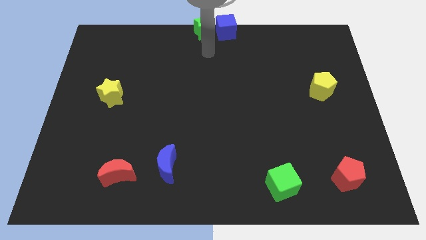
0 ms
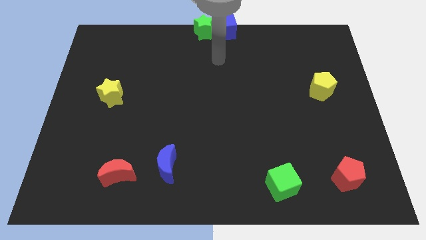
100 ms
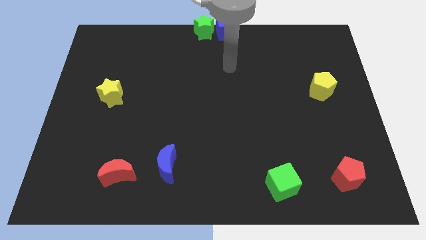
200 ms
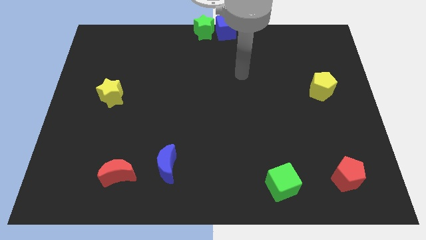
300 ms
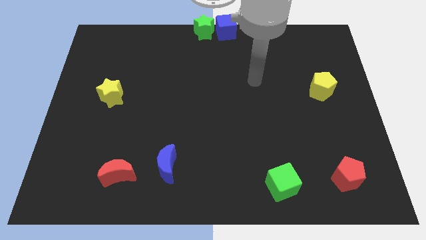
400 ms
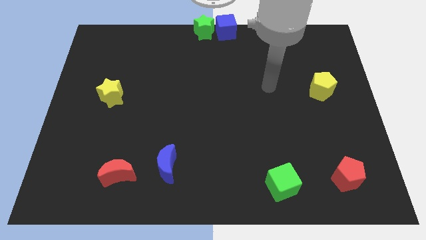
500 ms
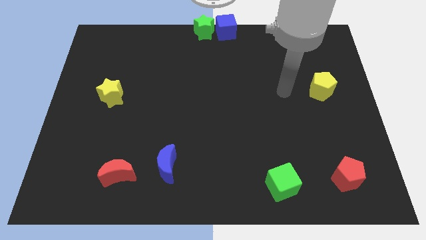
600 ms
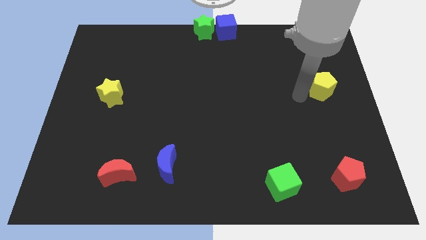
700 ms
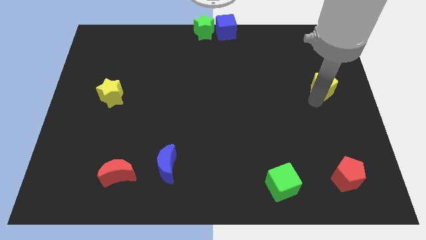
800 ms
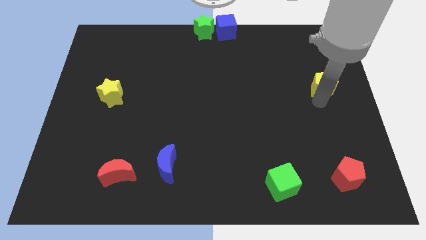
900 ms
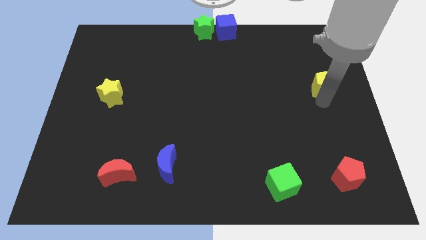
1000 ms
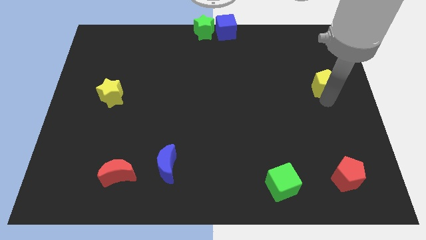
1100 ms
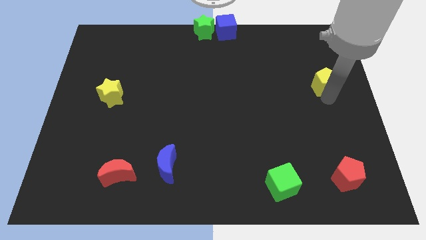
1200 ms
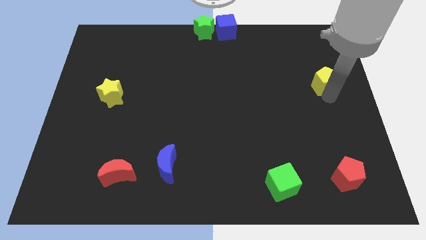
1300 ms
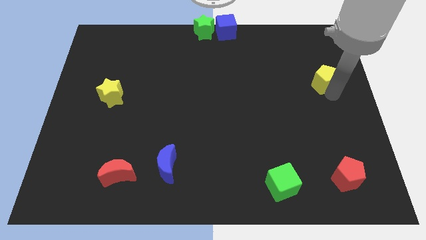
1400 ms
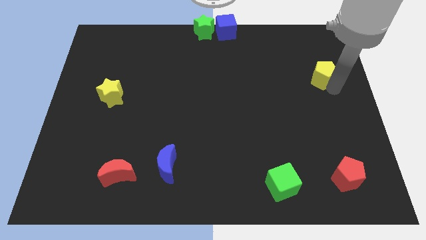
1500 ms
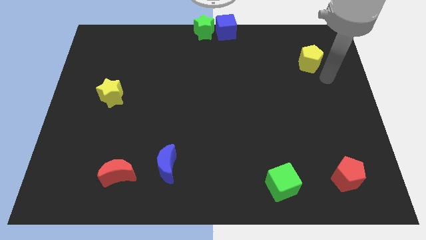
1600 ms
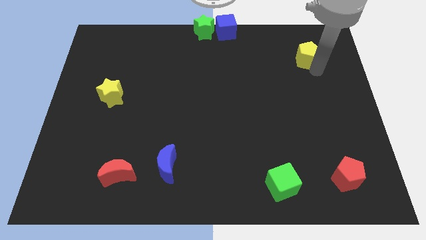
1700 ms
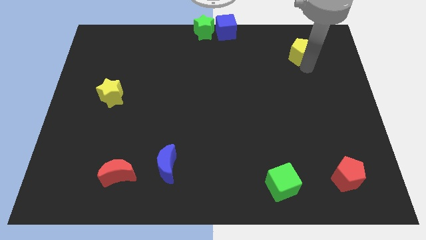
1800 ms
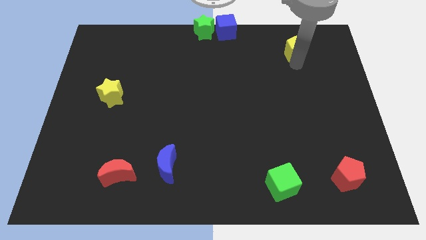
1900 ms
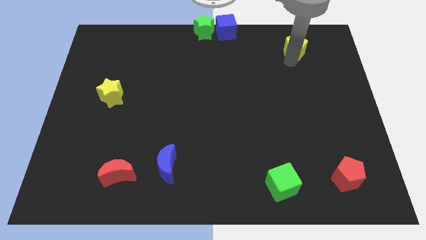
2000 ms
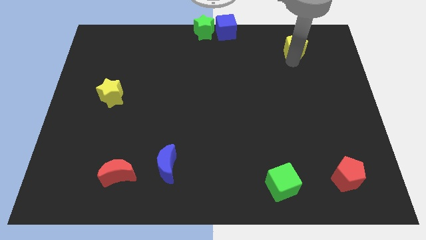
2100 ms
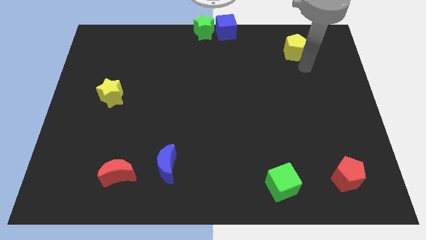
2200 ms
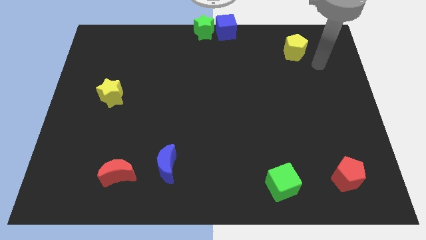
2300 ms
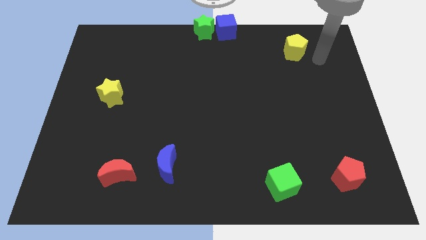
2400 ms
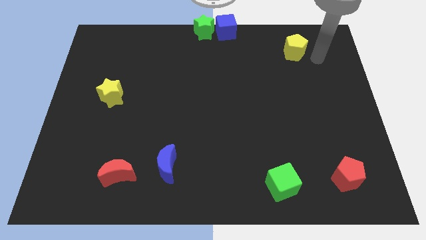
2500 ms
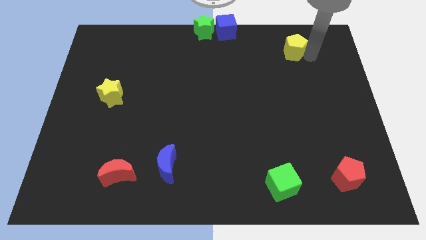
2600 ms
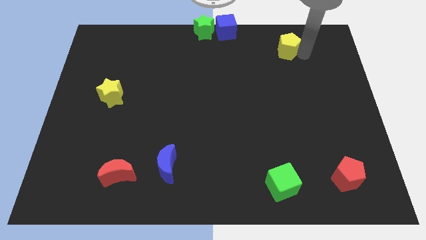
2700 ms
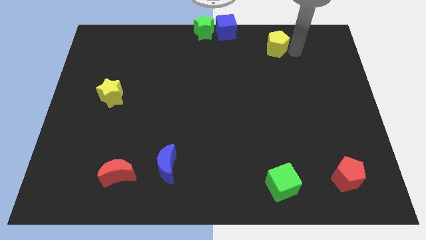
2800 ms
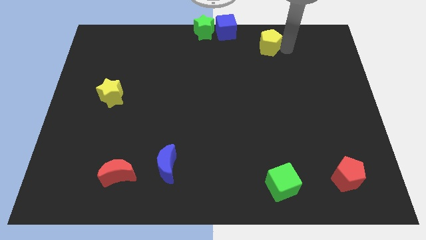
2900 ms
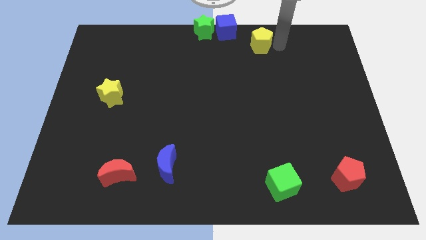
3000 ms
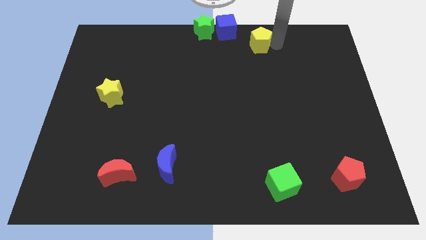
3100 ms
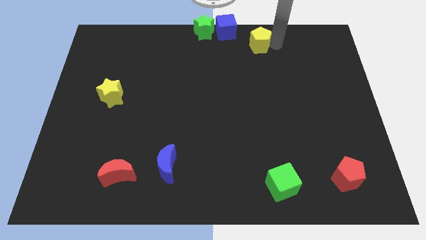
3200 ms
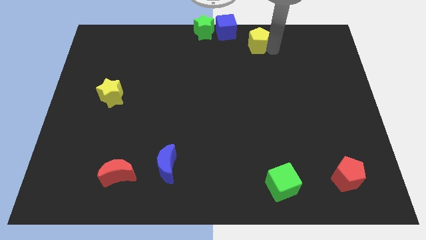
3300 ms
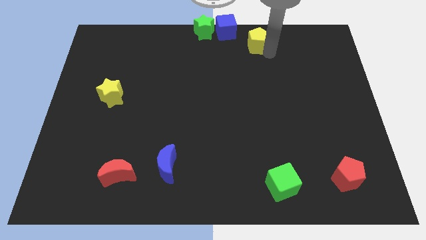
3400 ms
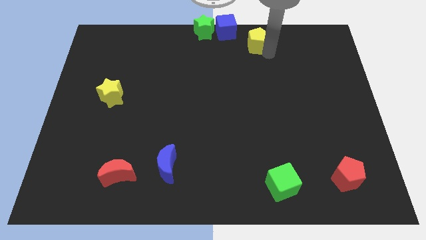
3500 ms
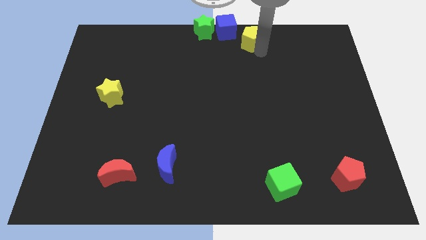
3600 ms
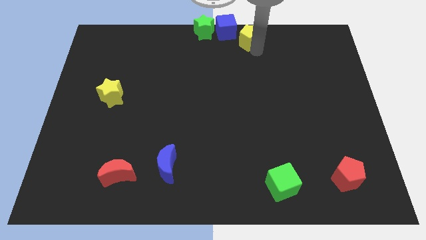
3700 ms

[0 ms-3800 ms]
move yellow pentagon towards blue cube

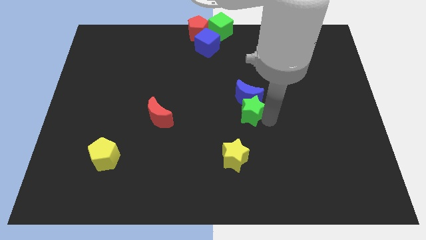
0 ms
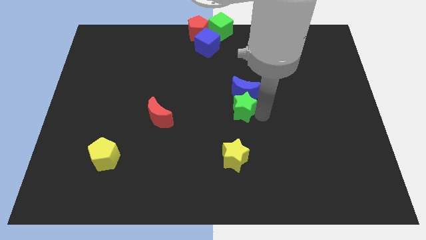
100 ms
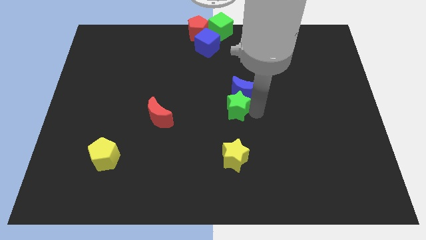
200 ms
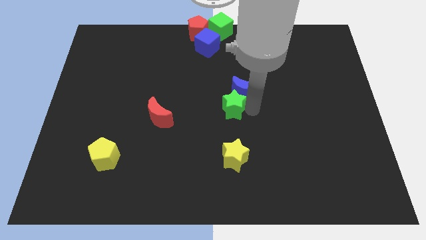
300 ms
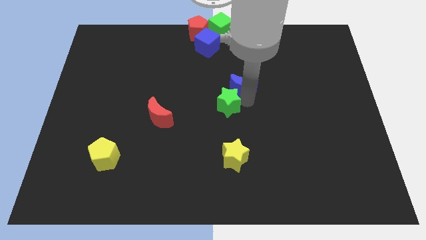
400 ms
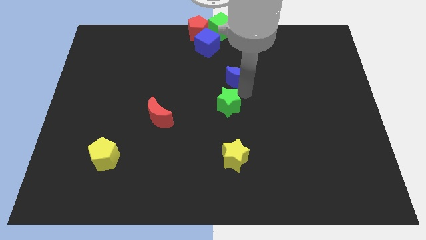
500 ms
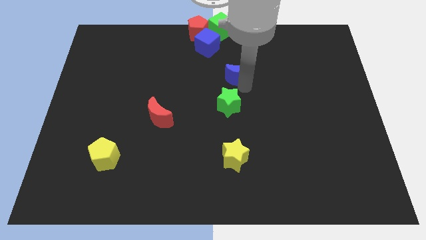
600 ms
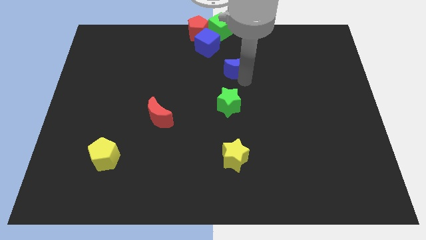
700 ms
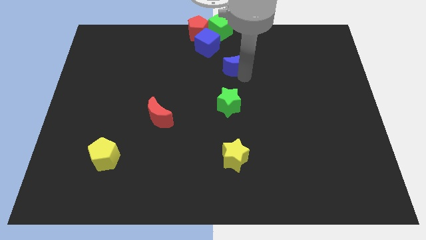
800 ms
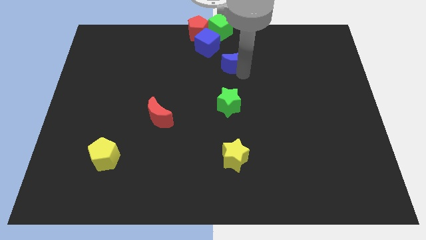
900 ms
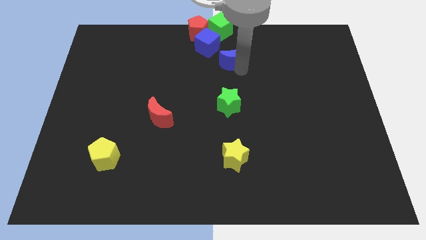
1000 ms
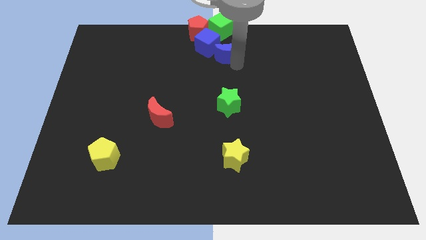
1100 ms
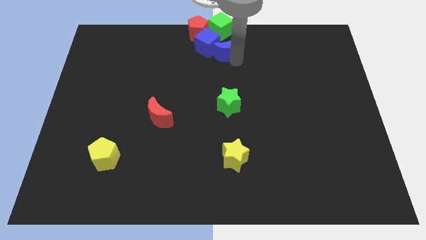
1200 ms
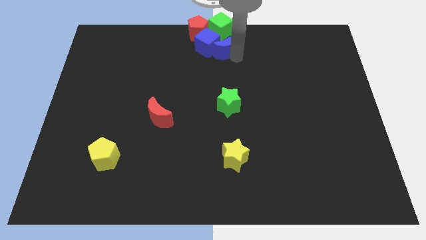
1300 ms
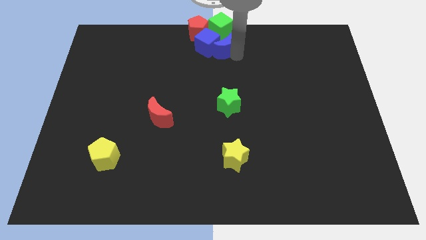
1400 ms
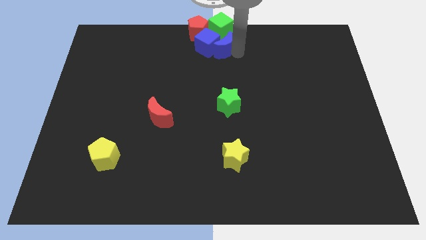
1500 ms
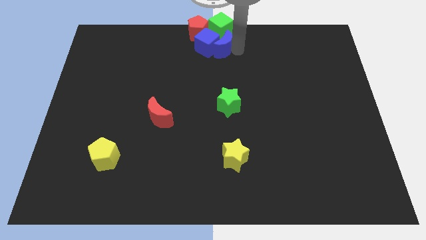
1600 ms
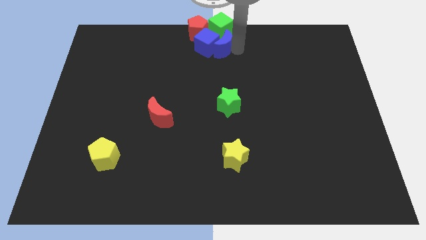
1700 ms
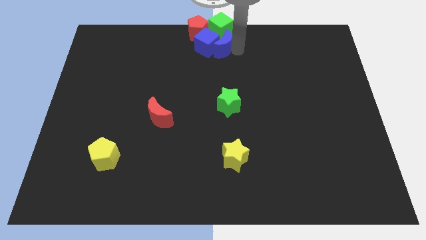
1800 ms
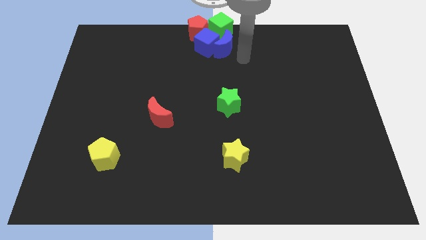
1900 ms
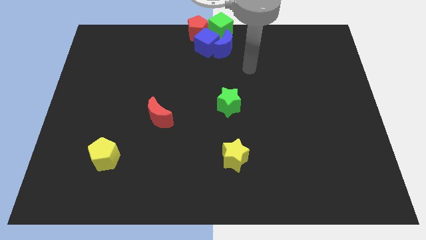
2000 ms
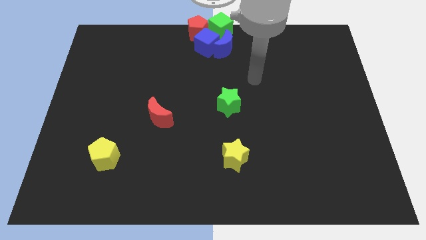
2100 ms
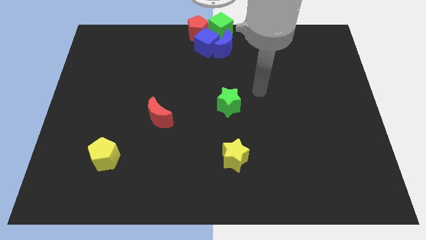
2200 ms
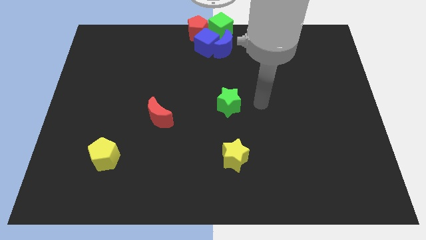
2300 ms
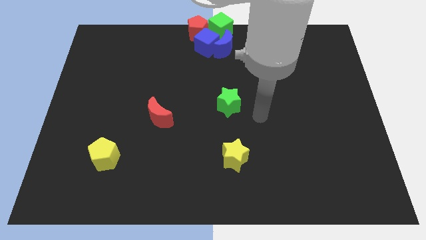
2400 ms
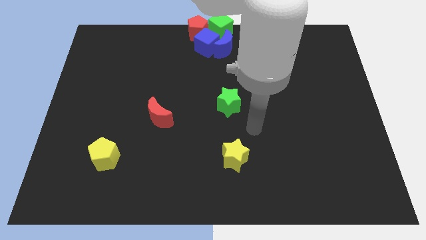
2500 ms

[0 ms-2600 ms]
separate the blue moon away from green star

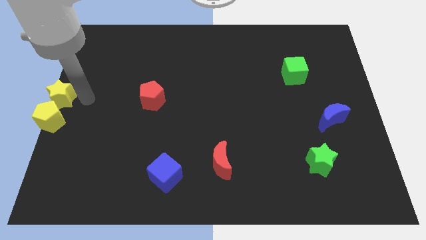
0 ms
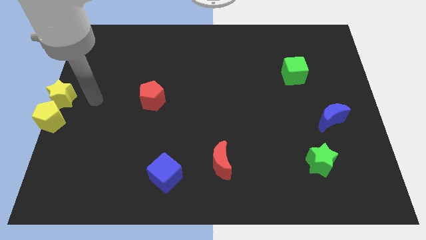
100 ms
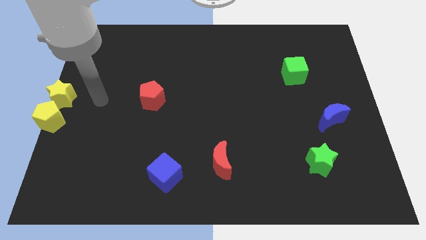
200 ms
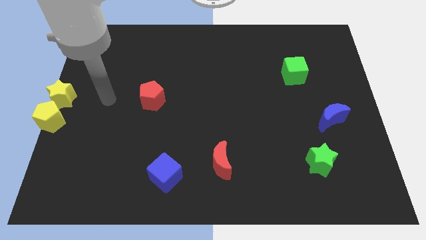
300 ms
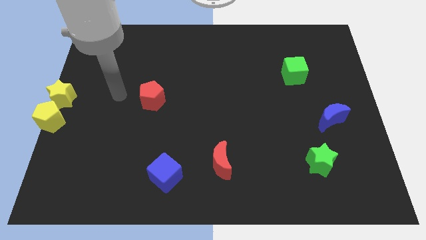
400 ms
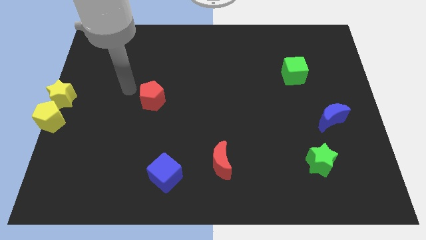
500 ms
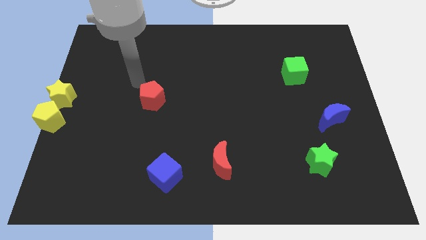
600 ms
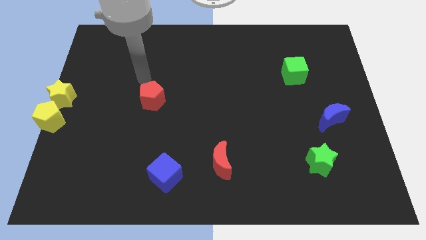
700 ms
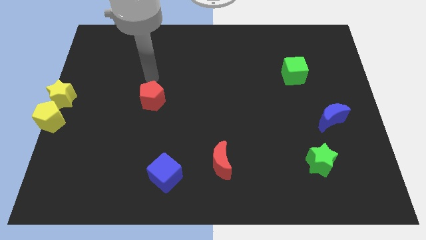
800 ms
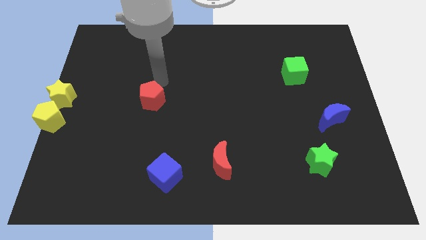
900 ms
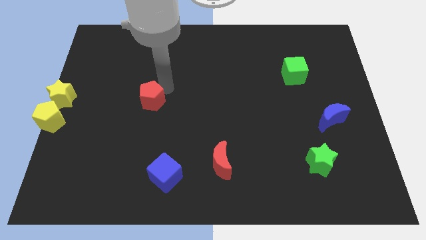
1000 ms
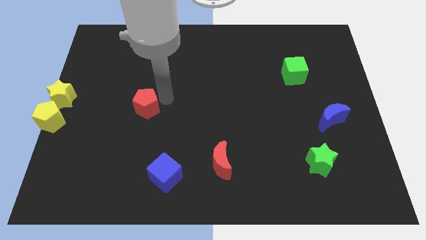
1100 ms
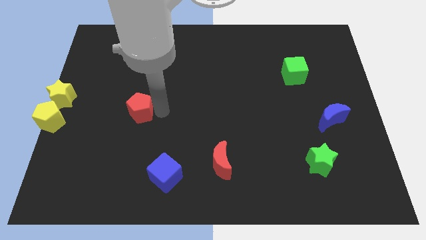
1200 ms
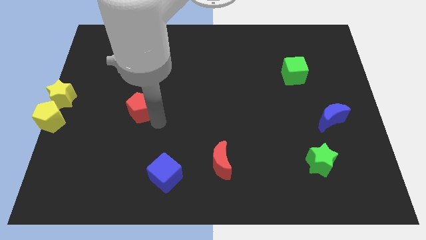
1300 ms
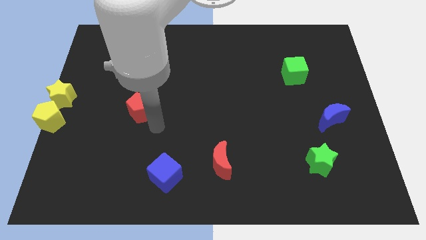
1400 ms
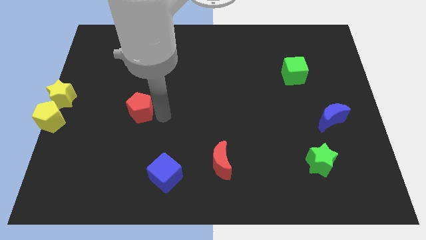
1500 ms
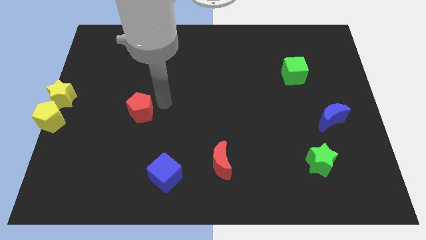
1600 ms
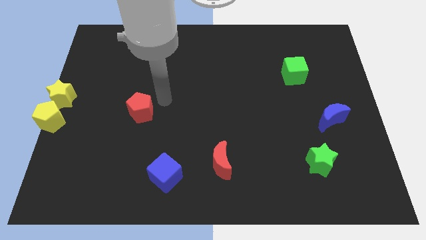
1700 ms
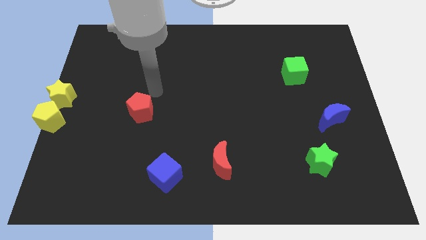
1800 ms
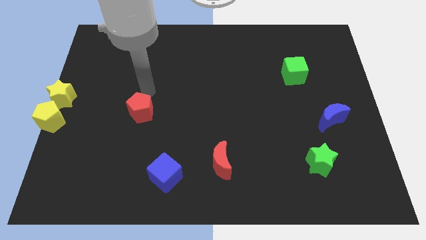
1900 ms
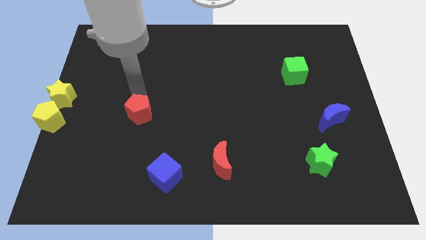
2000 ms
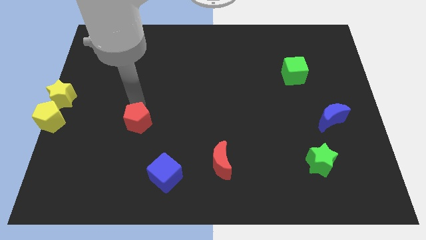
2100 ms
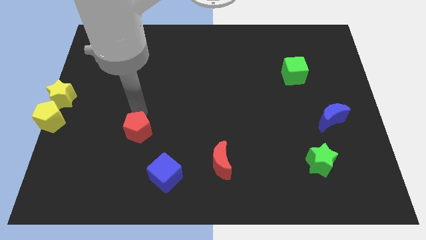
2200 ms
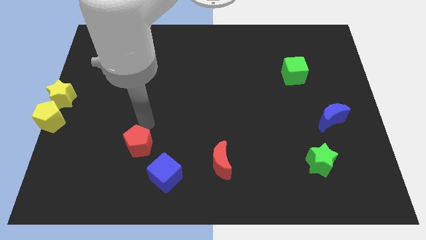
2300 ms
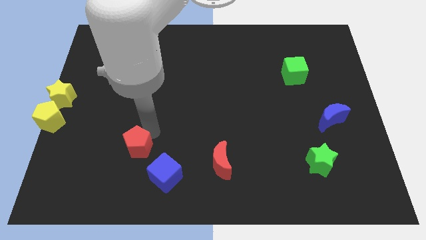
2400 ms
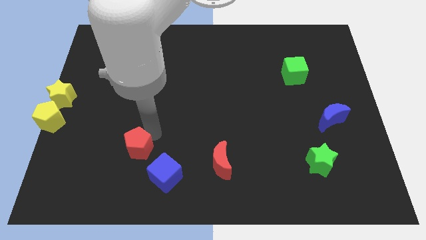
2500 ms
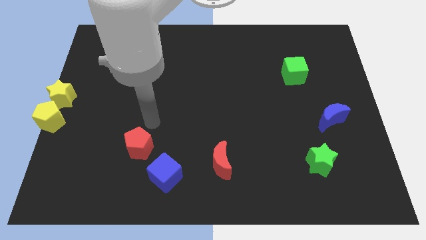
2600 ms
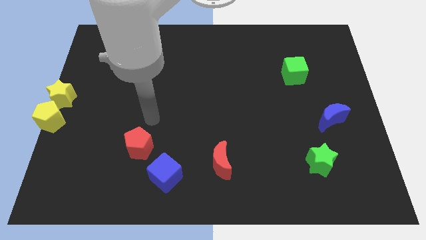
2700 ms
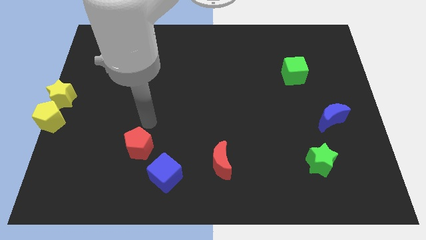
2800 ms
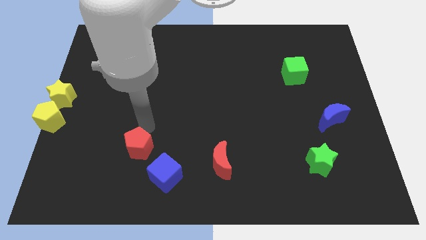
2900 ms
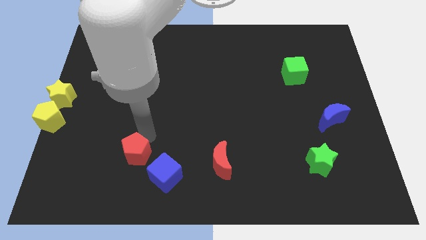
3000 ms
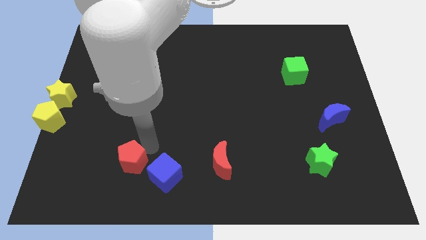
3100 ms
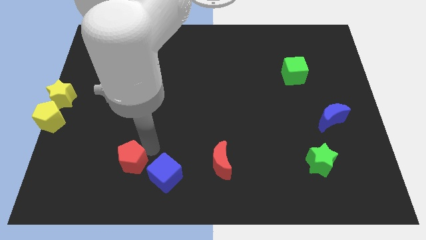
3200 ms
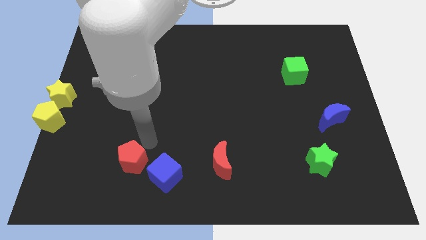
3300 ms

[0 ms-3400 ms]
slide the red pentagon to the left of the blue cube
